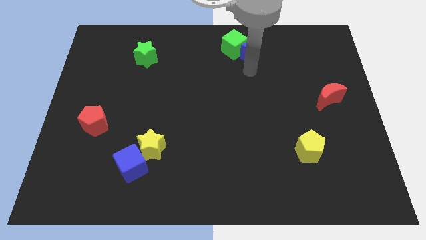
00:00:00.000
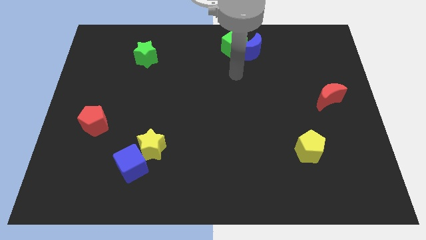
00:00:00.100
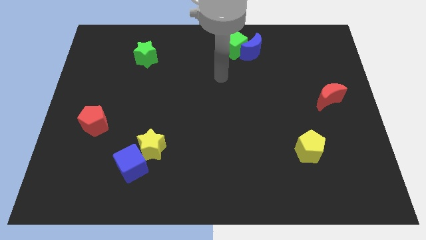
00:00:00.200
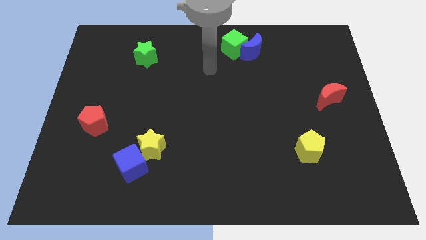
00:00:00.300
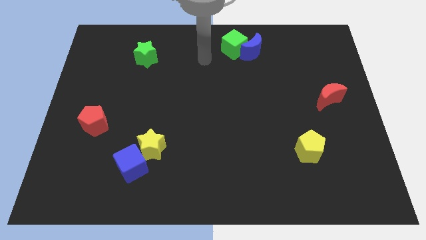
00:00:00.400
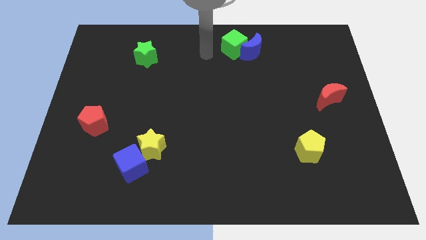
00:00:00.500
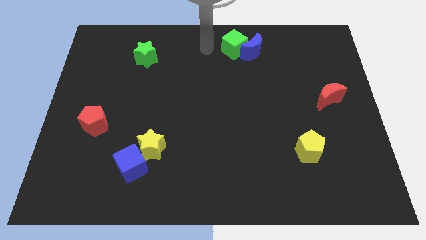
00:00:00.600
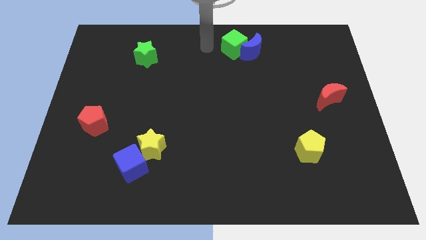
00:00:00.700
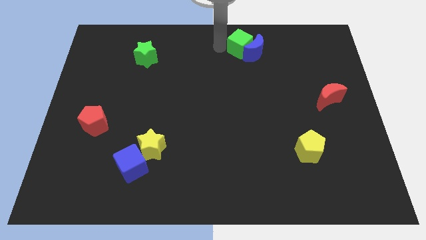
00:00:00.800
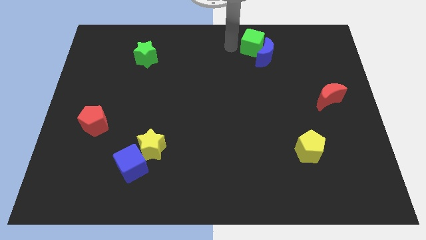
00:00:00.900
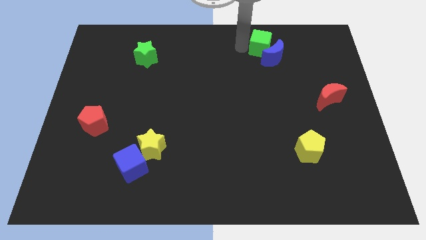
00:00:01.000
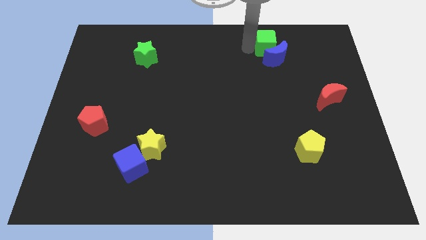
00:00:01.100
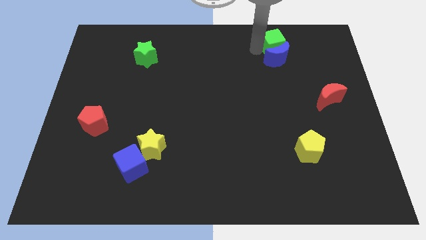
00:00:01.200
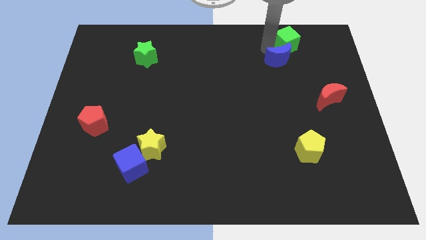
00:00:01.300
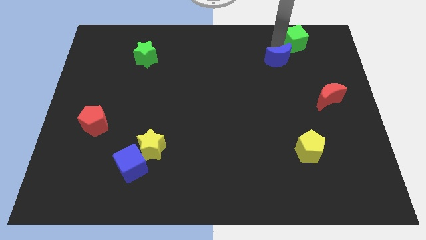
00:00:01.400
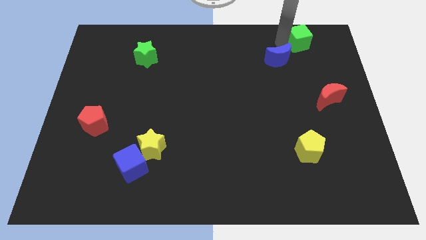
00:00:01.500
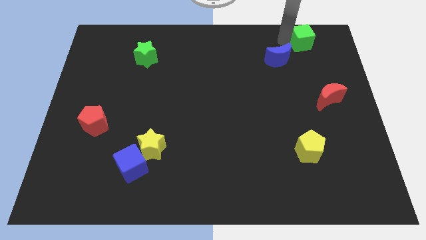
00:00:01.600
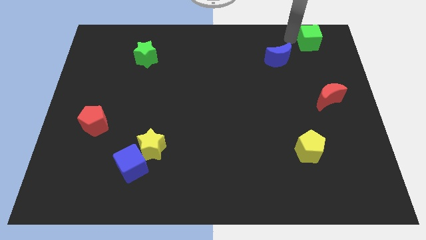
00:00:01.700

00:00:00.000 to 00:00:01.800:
move the green cube to the top right

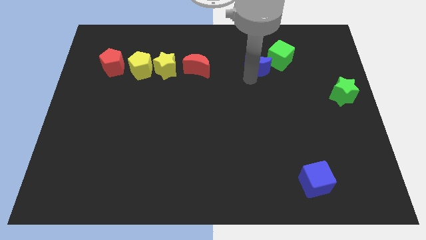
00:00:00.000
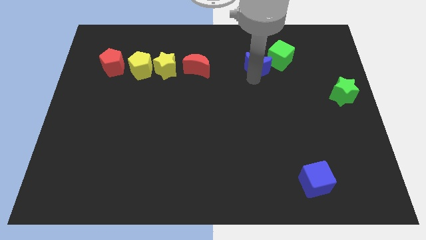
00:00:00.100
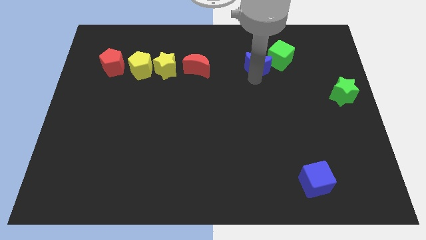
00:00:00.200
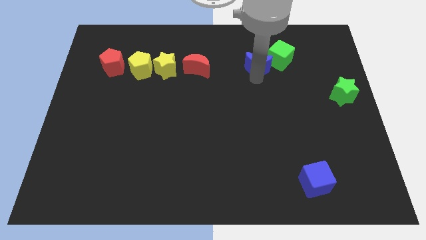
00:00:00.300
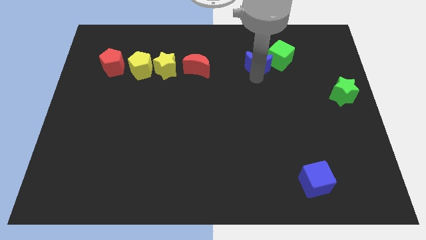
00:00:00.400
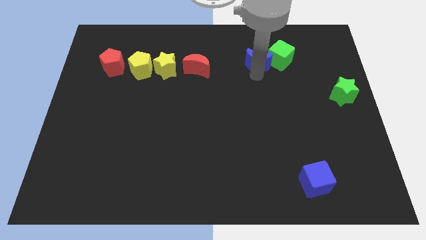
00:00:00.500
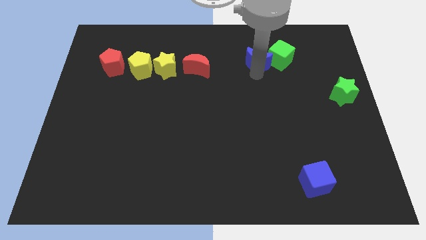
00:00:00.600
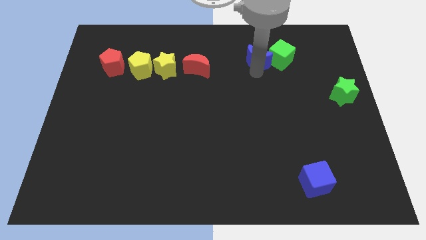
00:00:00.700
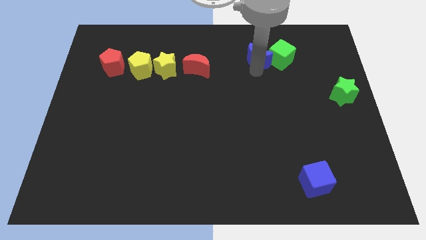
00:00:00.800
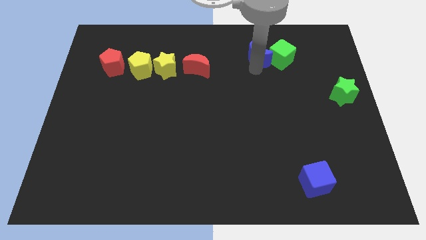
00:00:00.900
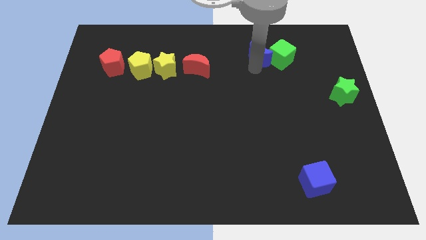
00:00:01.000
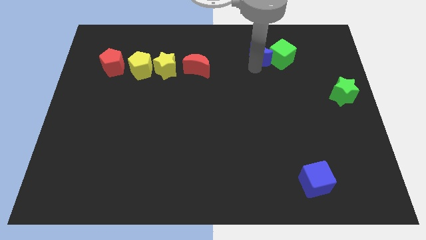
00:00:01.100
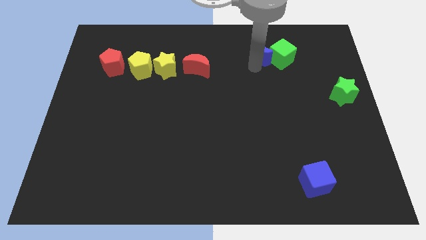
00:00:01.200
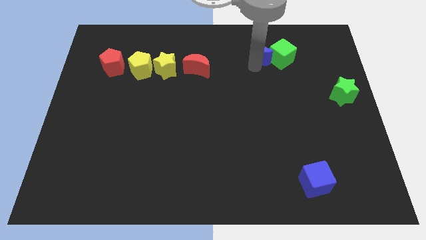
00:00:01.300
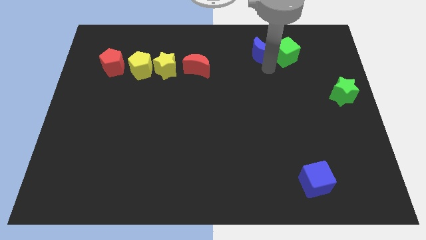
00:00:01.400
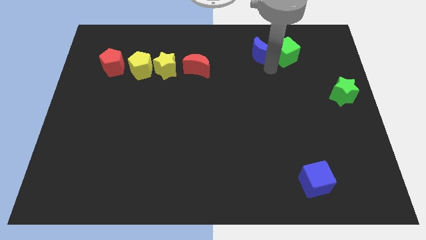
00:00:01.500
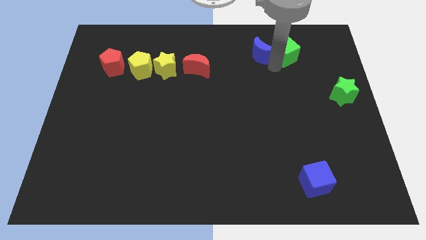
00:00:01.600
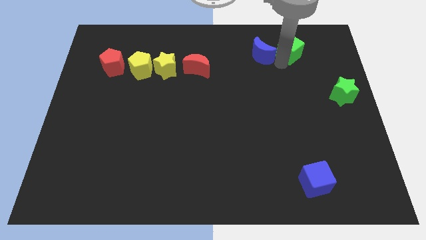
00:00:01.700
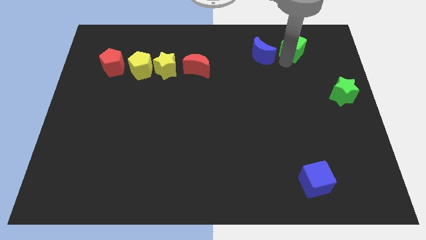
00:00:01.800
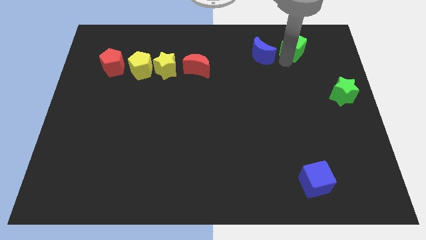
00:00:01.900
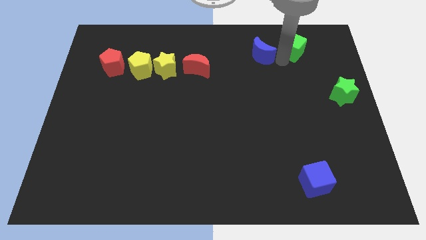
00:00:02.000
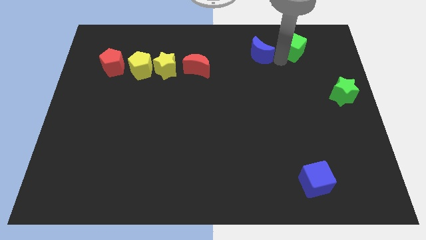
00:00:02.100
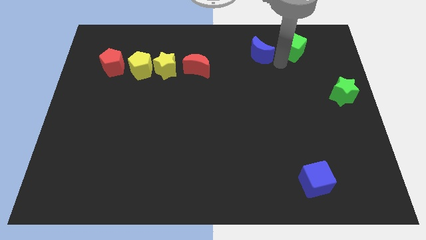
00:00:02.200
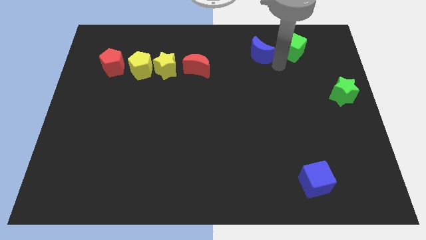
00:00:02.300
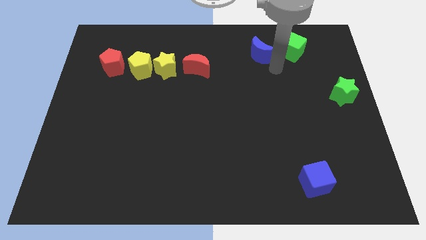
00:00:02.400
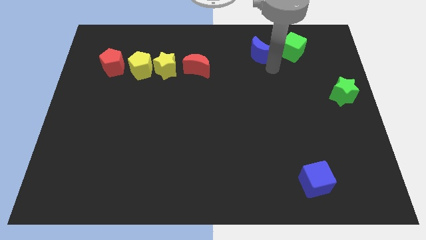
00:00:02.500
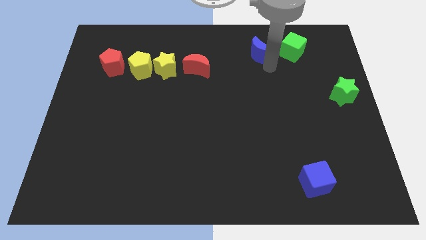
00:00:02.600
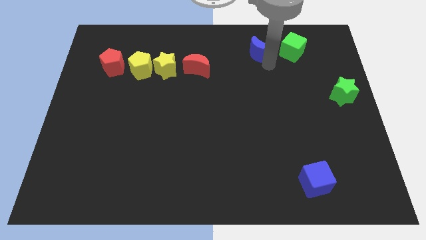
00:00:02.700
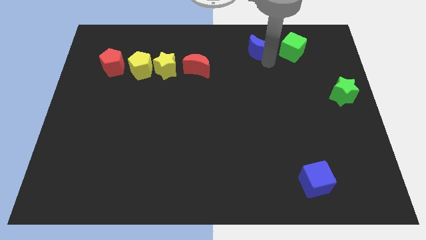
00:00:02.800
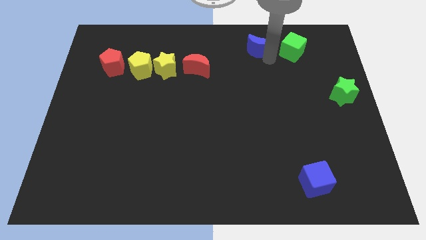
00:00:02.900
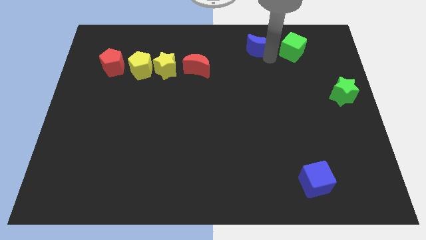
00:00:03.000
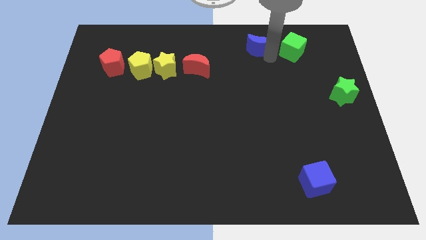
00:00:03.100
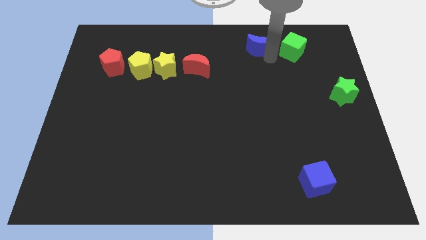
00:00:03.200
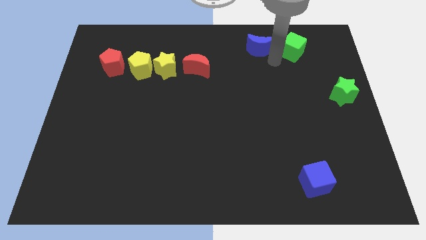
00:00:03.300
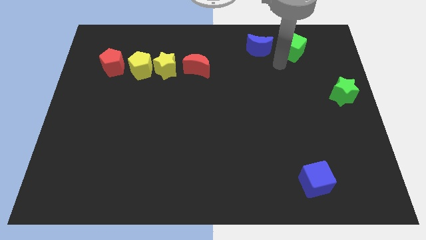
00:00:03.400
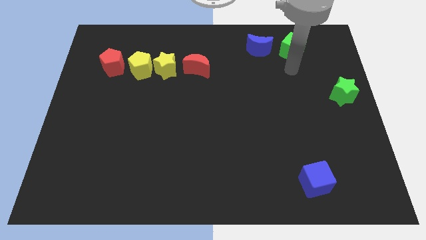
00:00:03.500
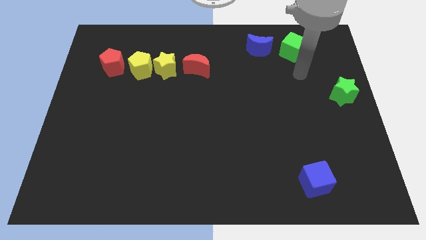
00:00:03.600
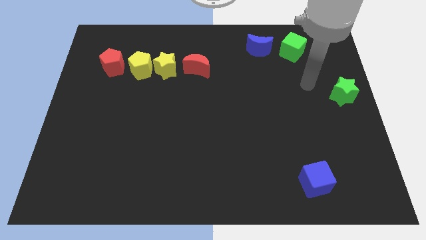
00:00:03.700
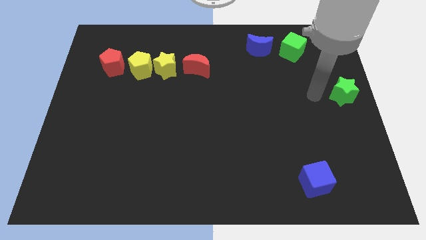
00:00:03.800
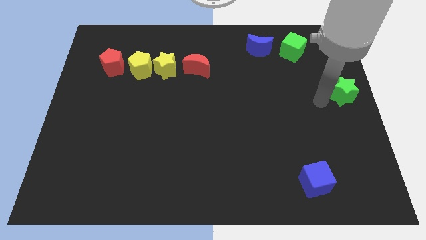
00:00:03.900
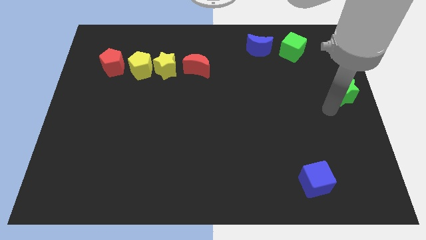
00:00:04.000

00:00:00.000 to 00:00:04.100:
place the blue crescent to the left of the green cube

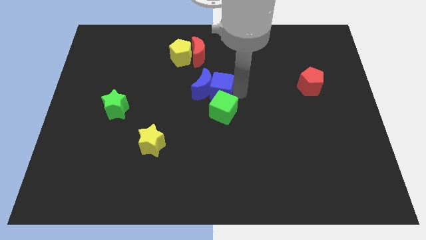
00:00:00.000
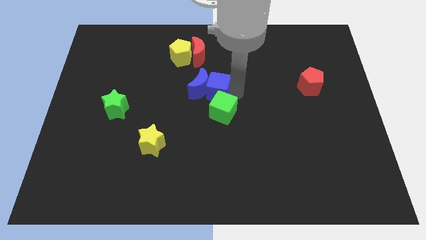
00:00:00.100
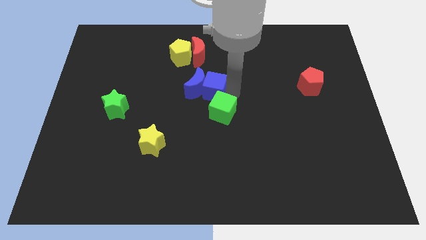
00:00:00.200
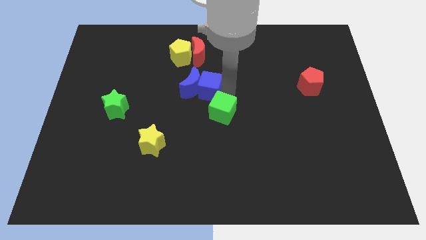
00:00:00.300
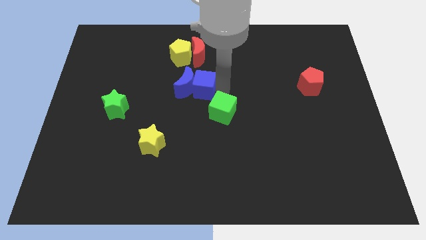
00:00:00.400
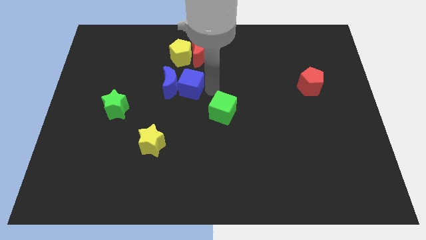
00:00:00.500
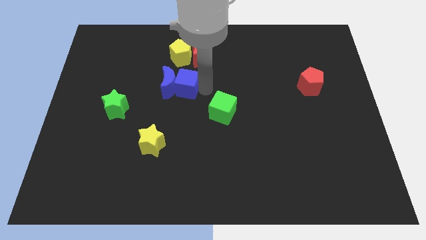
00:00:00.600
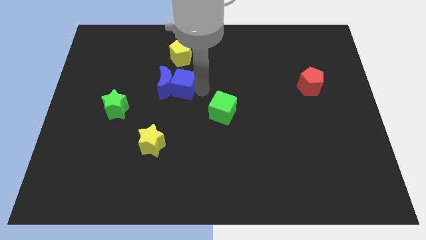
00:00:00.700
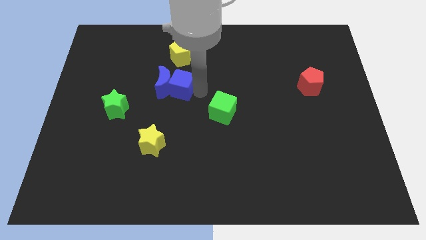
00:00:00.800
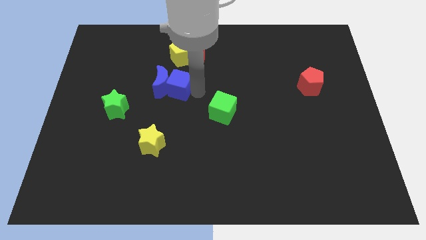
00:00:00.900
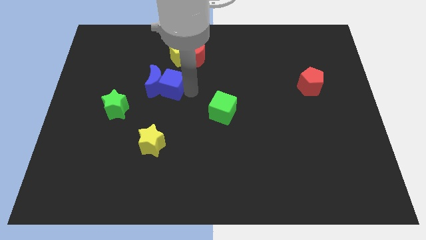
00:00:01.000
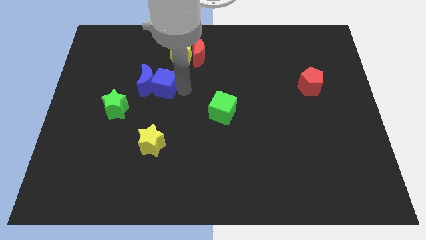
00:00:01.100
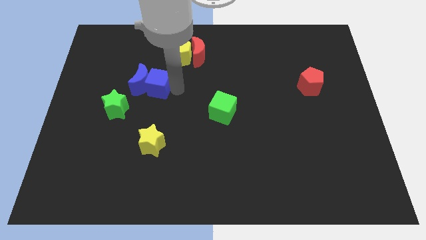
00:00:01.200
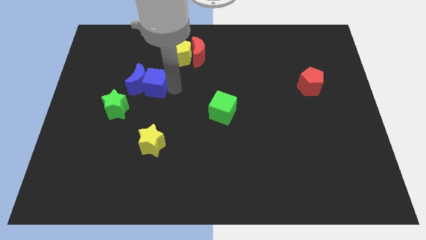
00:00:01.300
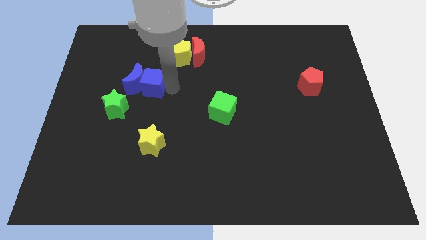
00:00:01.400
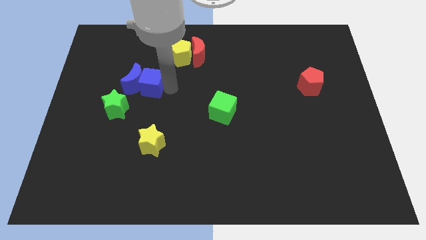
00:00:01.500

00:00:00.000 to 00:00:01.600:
move blue blocks towards left of the board

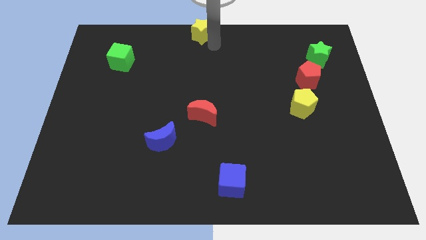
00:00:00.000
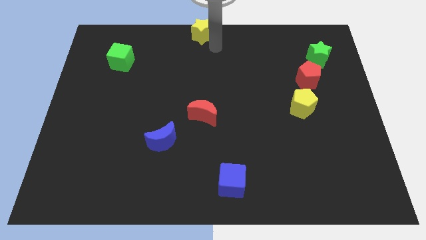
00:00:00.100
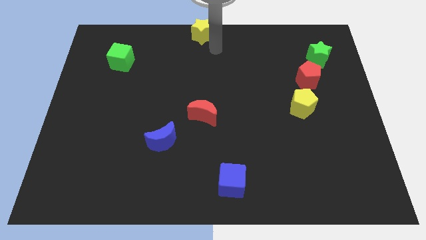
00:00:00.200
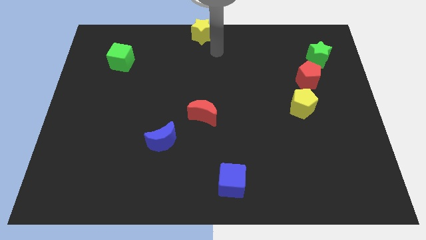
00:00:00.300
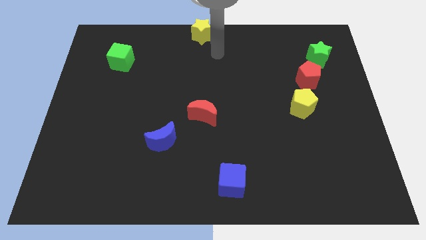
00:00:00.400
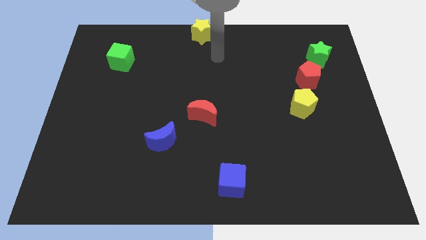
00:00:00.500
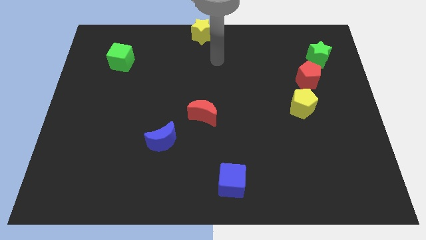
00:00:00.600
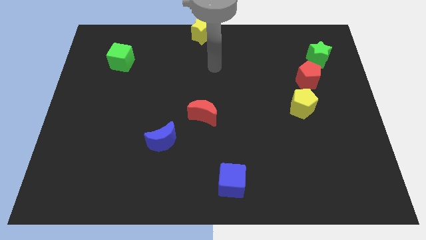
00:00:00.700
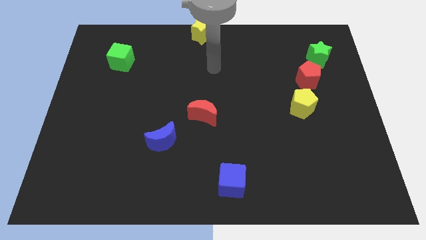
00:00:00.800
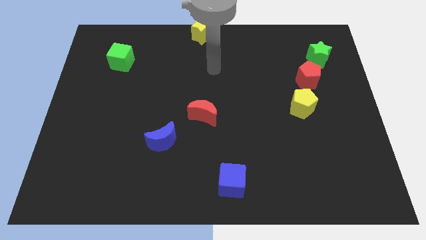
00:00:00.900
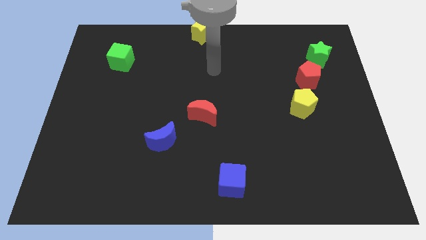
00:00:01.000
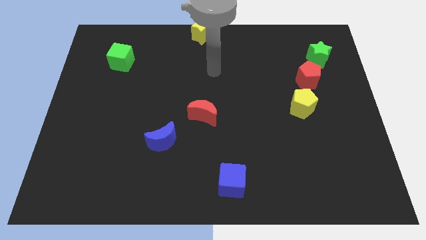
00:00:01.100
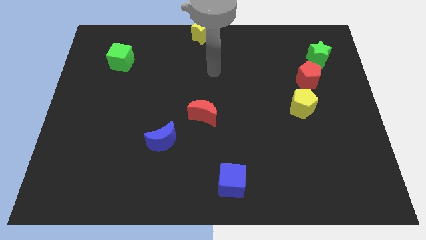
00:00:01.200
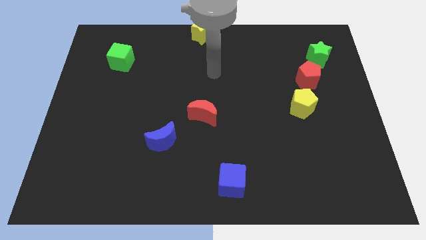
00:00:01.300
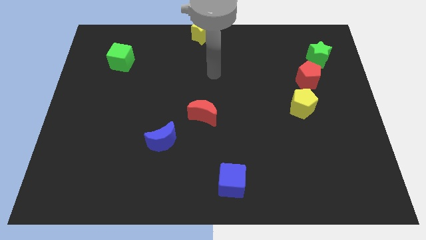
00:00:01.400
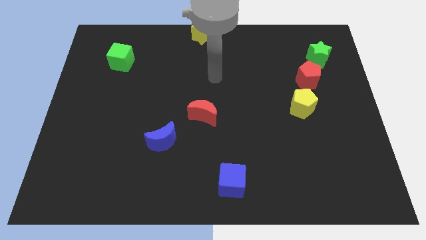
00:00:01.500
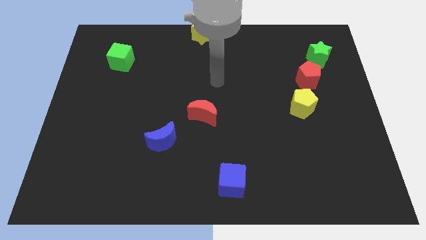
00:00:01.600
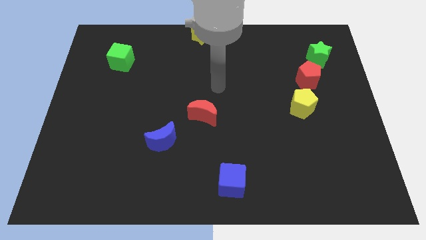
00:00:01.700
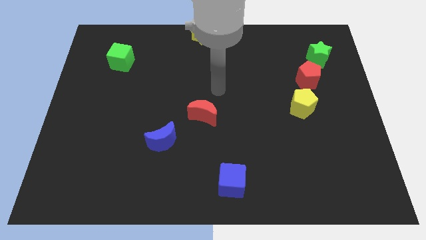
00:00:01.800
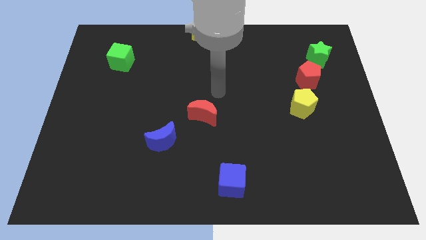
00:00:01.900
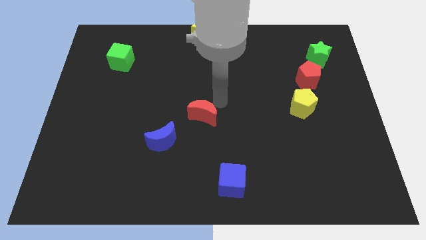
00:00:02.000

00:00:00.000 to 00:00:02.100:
move the arm away from the yellow star
